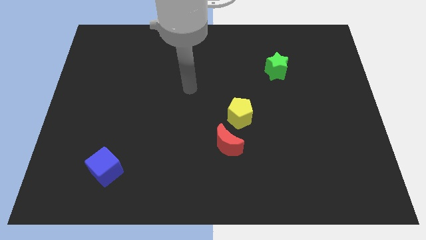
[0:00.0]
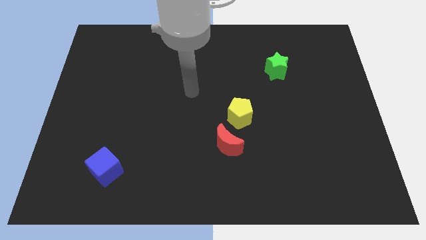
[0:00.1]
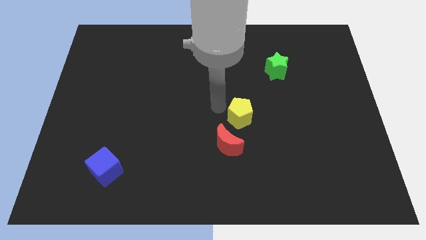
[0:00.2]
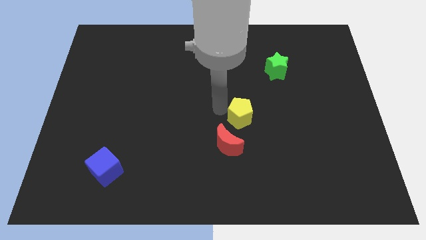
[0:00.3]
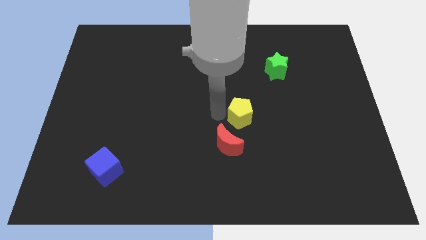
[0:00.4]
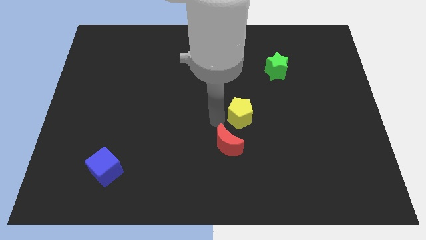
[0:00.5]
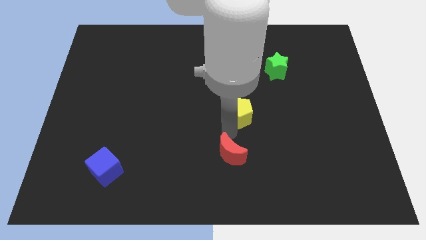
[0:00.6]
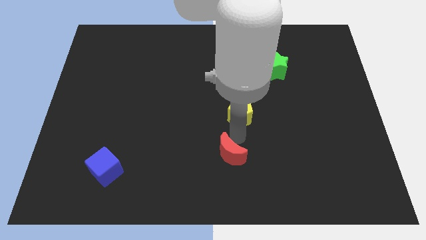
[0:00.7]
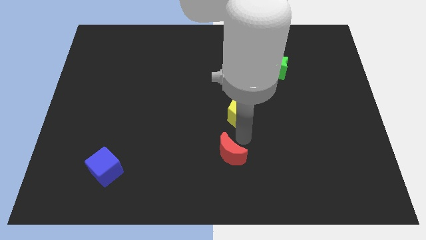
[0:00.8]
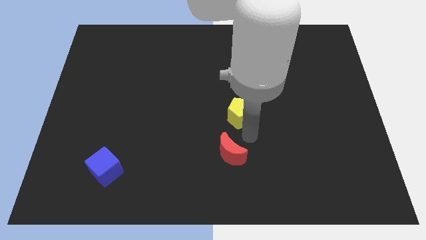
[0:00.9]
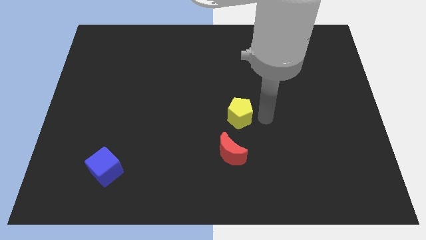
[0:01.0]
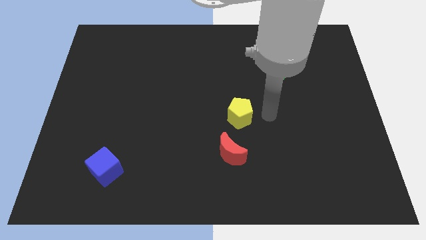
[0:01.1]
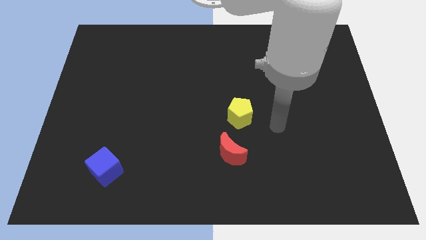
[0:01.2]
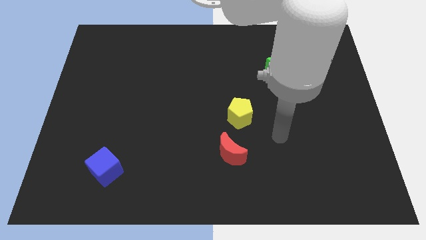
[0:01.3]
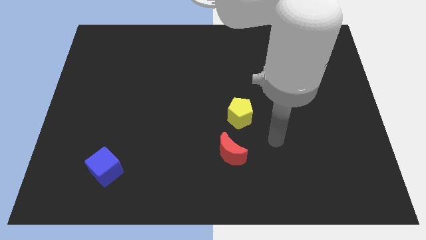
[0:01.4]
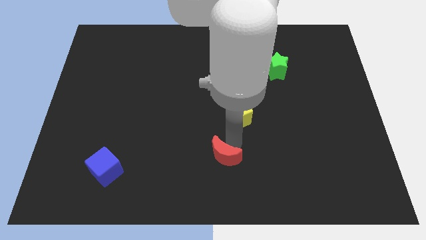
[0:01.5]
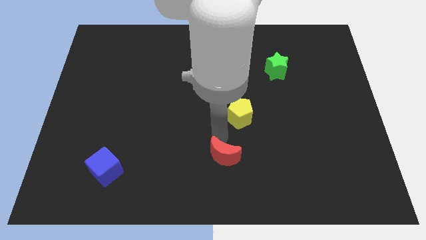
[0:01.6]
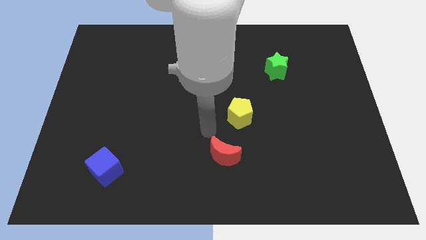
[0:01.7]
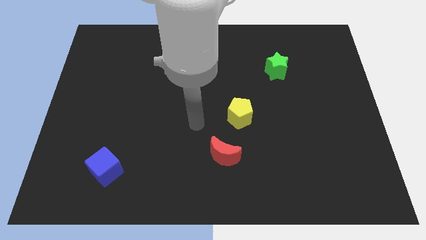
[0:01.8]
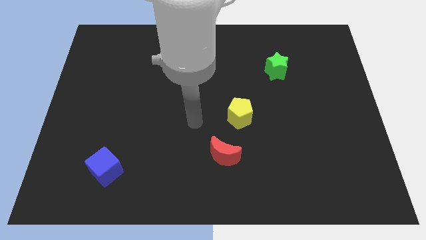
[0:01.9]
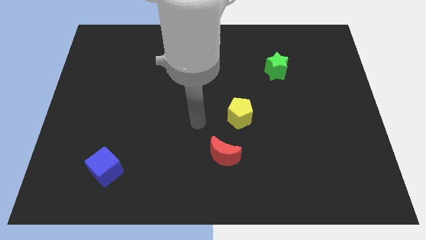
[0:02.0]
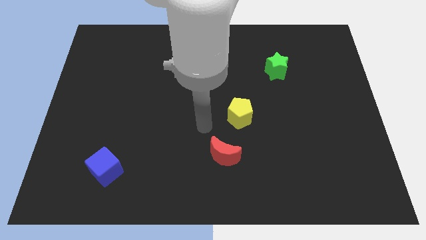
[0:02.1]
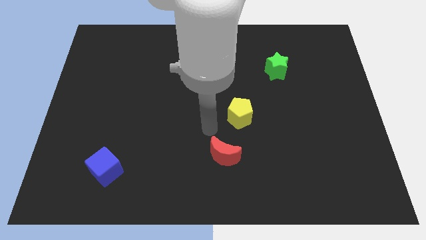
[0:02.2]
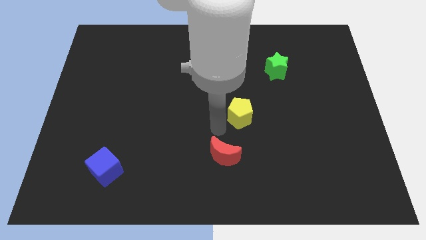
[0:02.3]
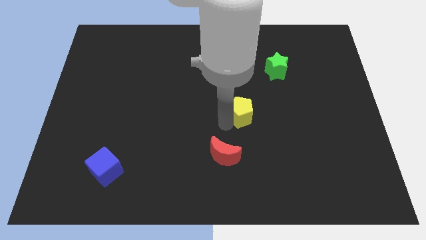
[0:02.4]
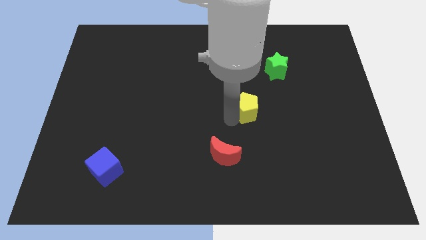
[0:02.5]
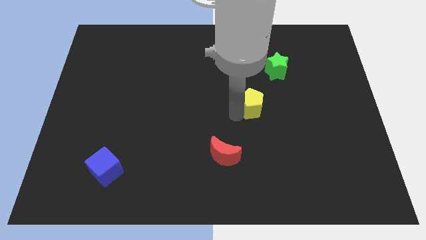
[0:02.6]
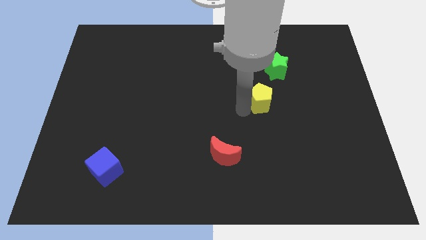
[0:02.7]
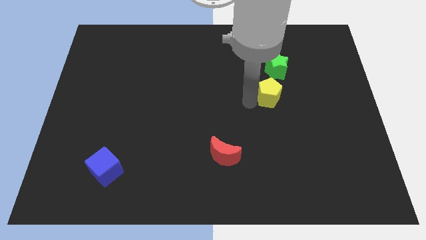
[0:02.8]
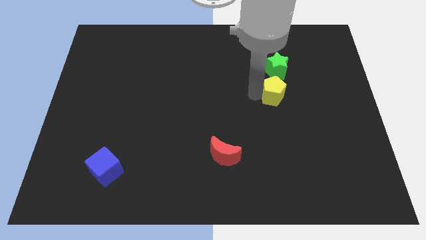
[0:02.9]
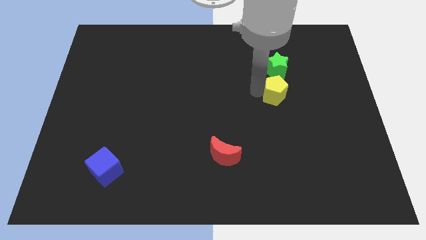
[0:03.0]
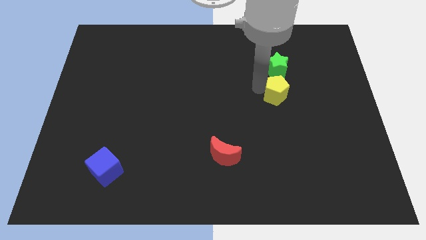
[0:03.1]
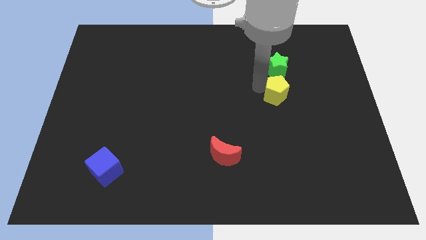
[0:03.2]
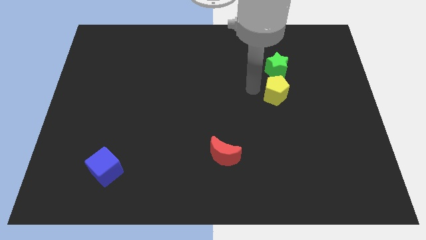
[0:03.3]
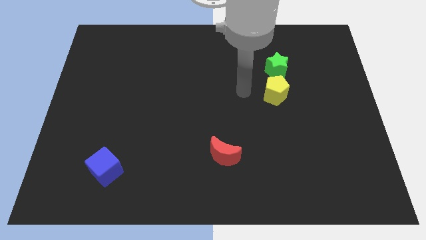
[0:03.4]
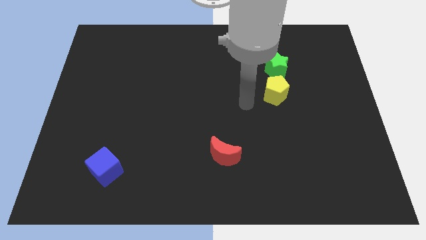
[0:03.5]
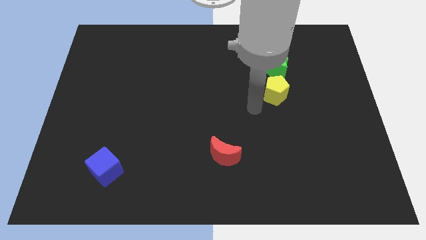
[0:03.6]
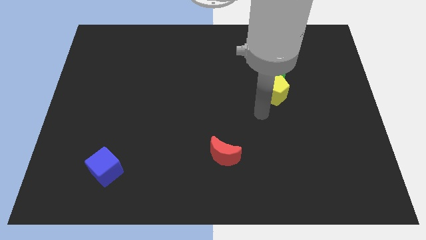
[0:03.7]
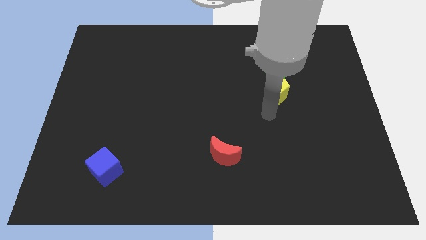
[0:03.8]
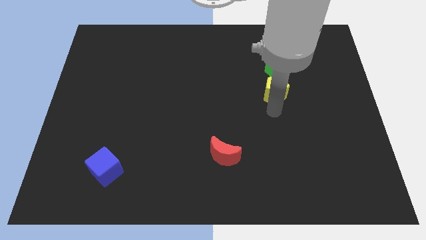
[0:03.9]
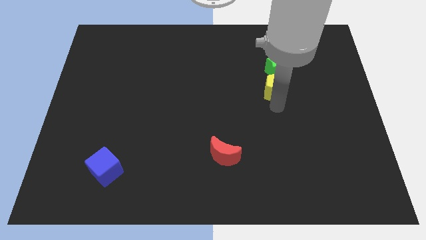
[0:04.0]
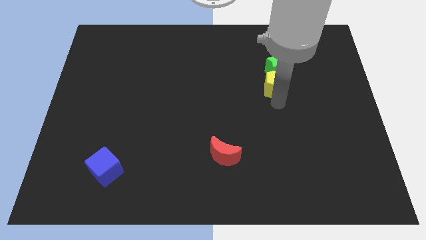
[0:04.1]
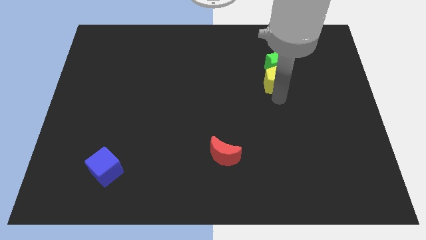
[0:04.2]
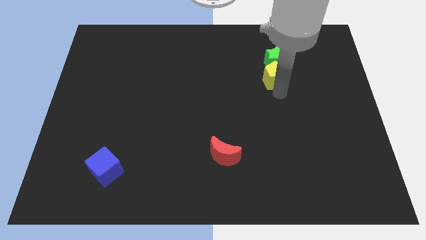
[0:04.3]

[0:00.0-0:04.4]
slide the pentagon close to the green star

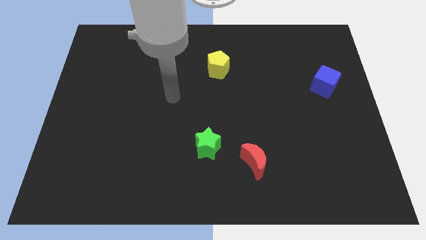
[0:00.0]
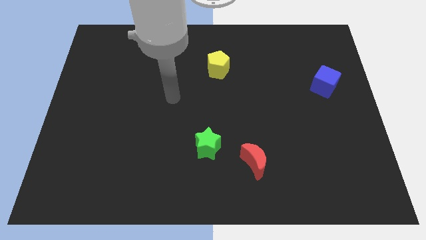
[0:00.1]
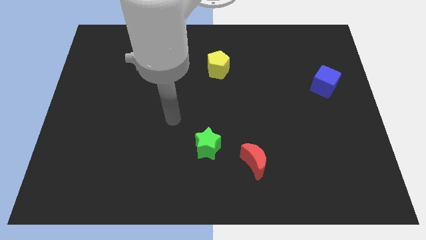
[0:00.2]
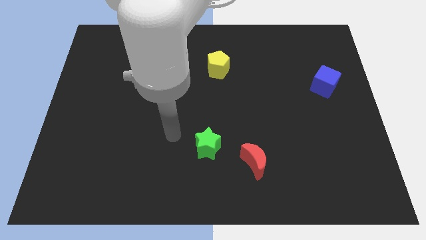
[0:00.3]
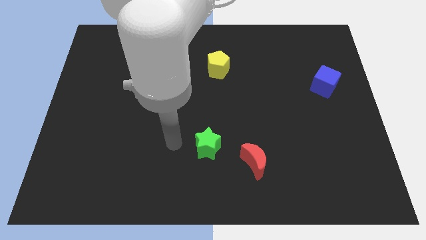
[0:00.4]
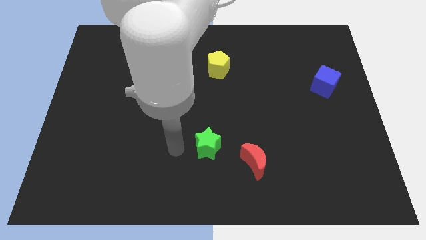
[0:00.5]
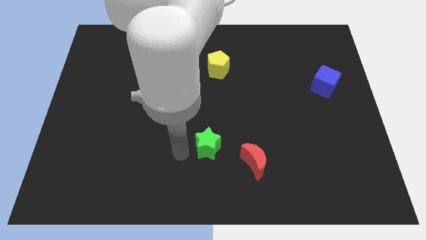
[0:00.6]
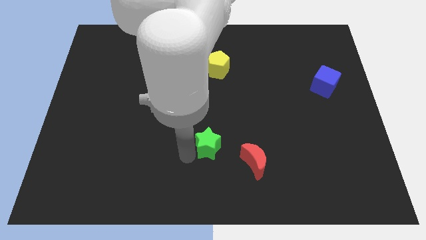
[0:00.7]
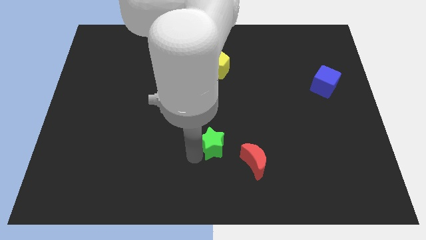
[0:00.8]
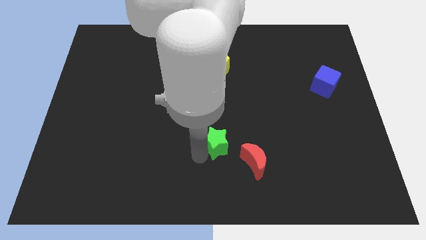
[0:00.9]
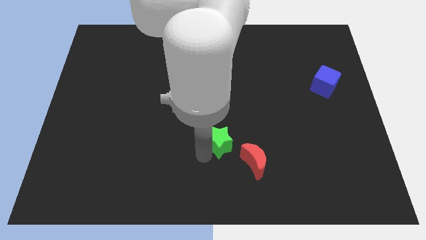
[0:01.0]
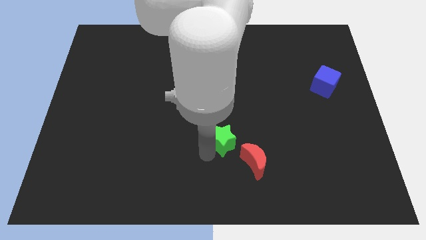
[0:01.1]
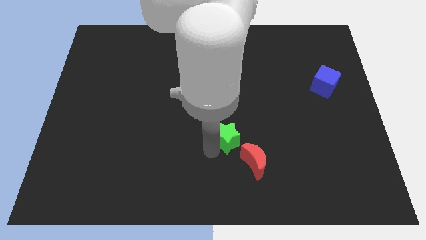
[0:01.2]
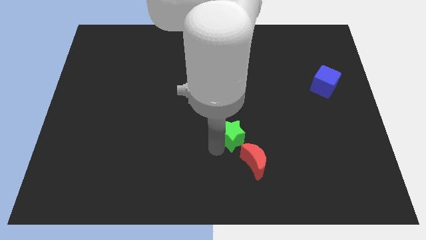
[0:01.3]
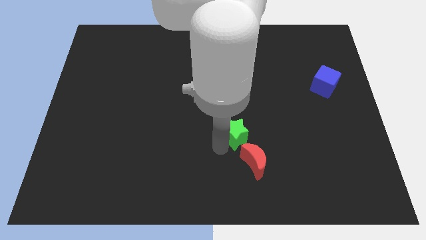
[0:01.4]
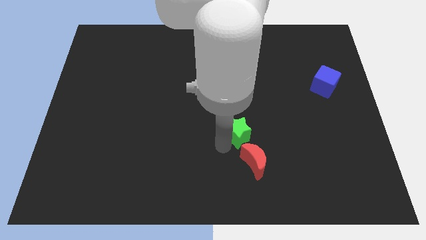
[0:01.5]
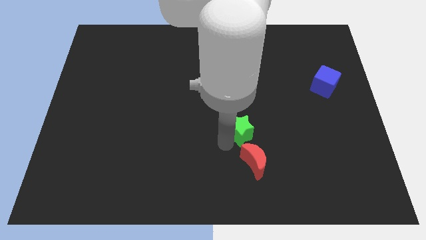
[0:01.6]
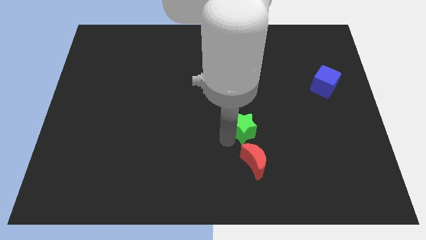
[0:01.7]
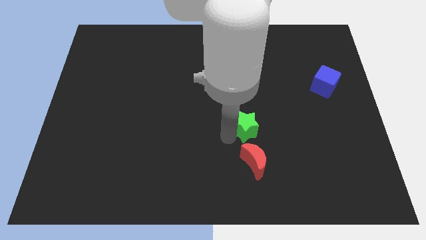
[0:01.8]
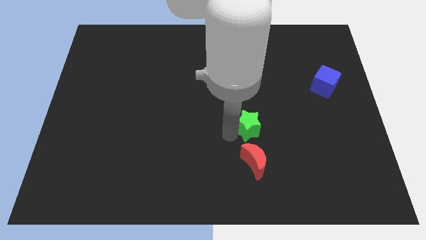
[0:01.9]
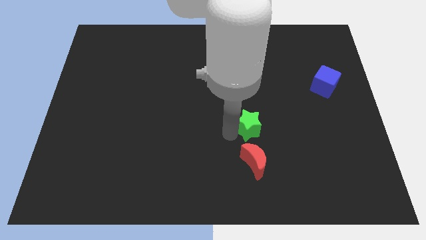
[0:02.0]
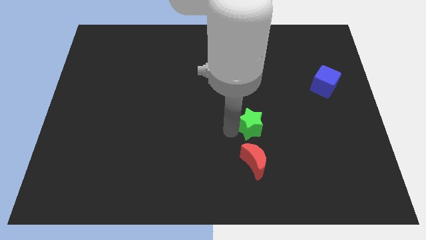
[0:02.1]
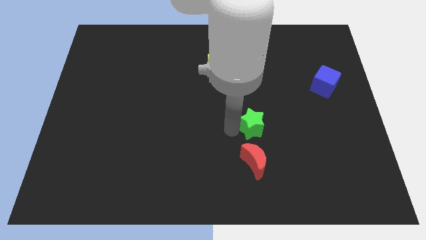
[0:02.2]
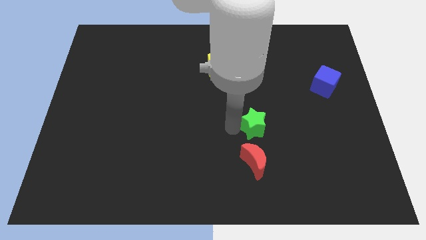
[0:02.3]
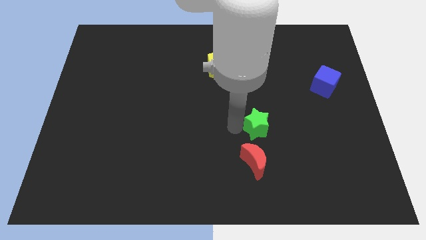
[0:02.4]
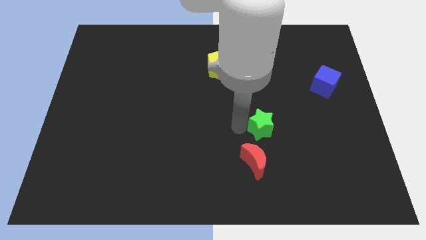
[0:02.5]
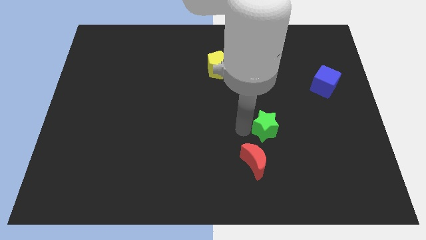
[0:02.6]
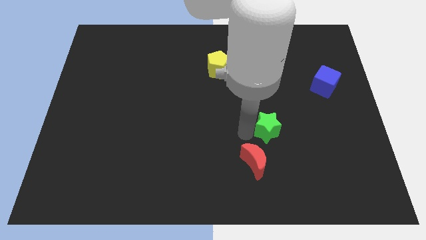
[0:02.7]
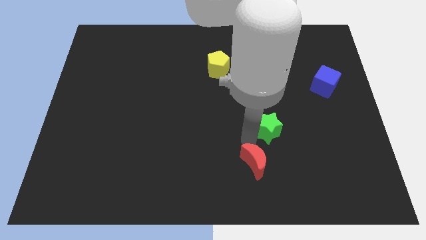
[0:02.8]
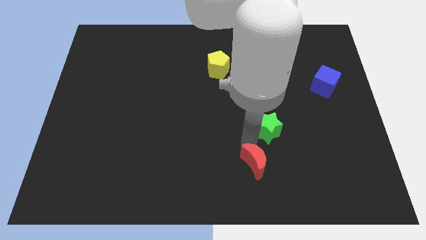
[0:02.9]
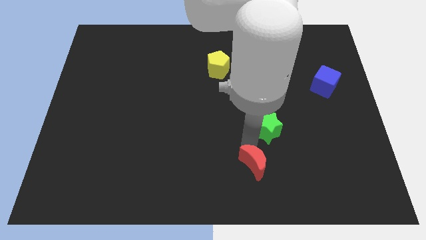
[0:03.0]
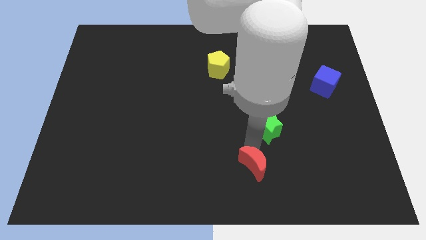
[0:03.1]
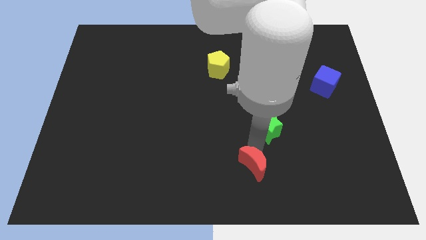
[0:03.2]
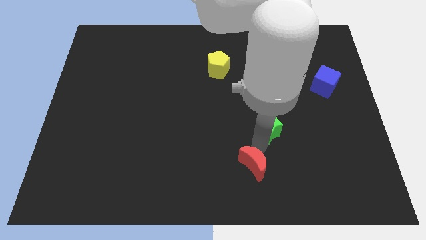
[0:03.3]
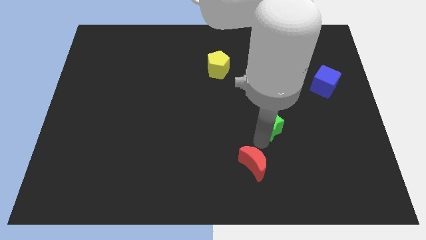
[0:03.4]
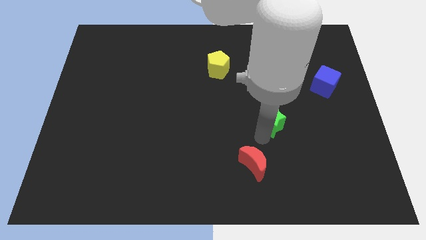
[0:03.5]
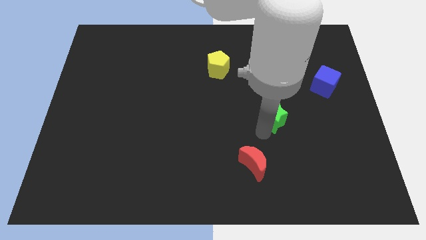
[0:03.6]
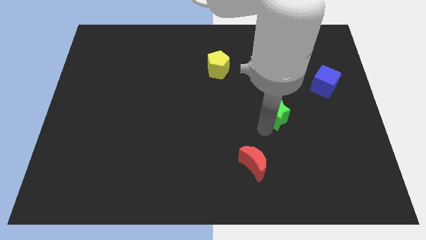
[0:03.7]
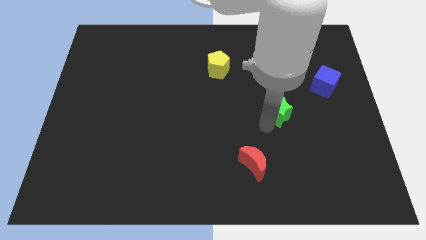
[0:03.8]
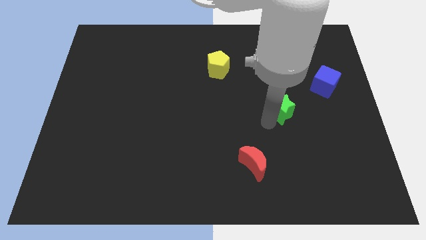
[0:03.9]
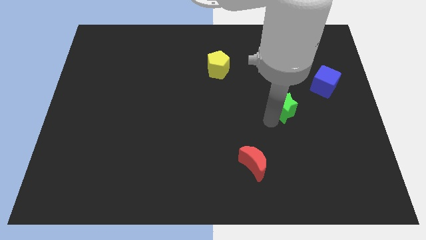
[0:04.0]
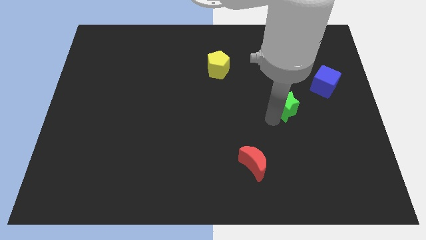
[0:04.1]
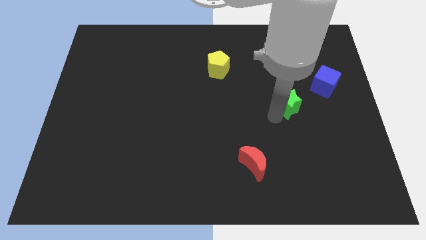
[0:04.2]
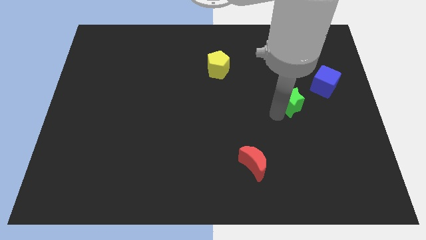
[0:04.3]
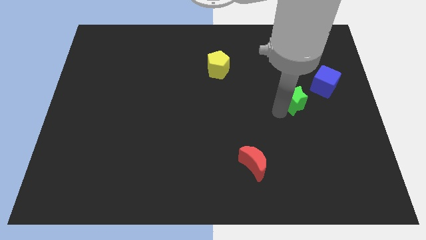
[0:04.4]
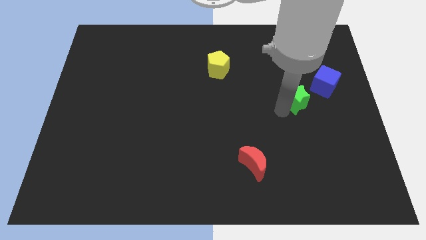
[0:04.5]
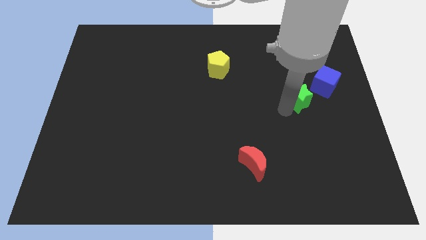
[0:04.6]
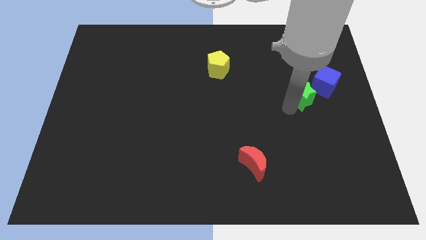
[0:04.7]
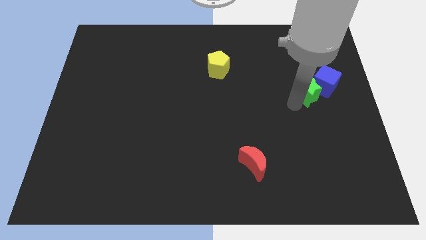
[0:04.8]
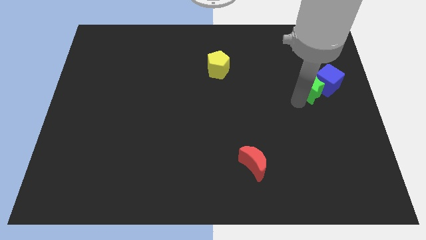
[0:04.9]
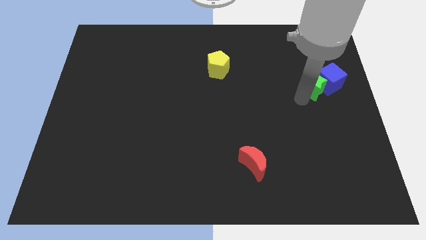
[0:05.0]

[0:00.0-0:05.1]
slide the star towards the blue block
